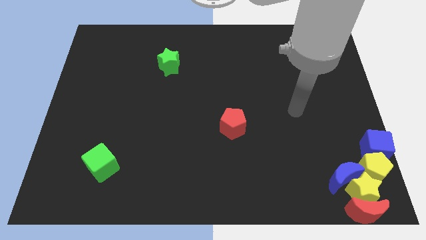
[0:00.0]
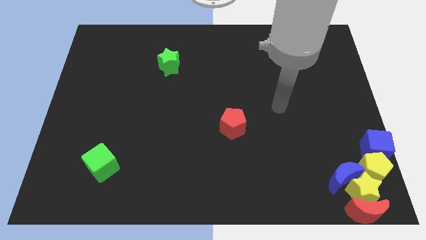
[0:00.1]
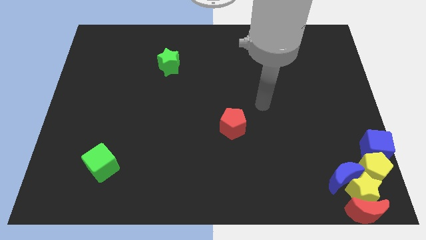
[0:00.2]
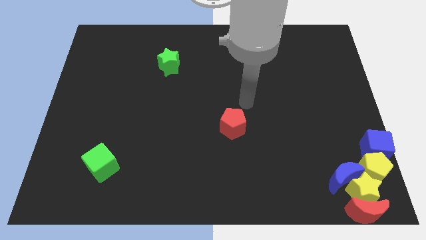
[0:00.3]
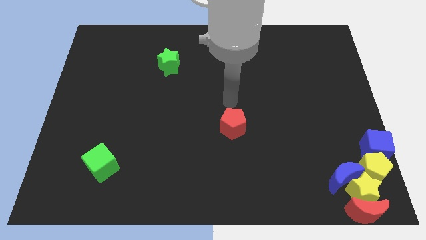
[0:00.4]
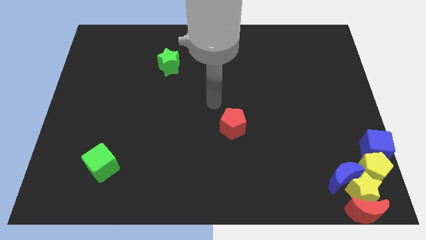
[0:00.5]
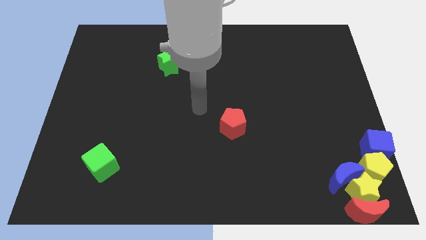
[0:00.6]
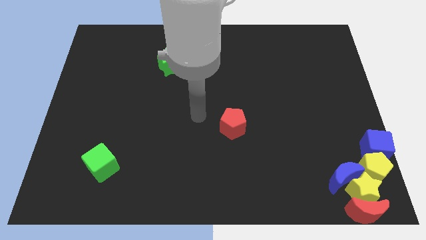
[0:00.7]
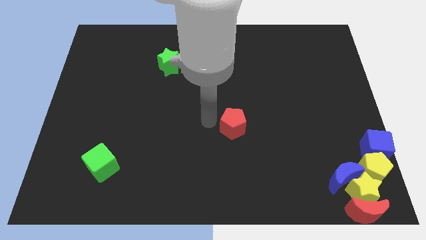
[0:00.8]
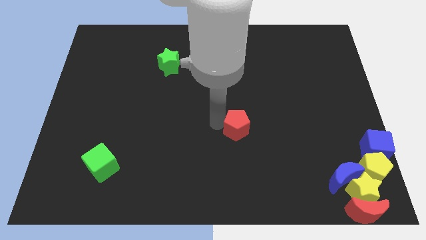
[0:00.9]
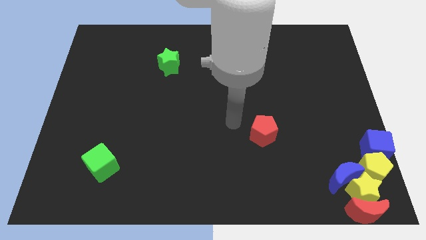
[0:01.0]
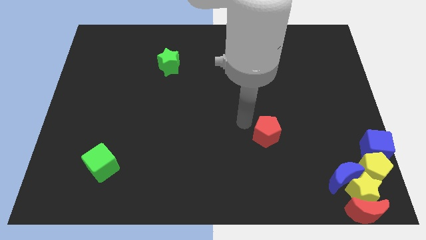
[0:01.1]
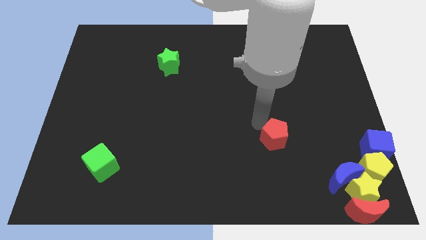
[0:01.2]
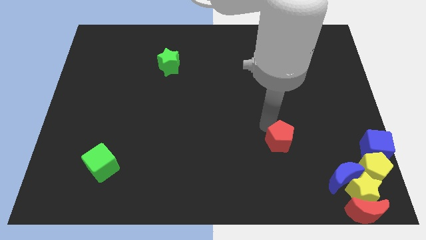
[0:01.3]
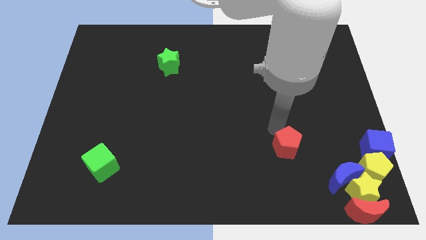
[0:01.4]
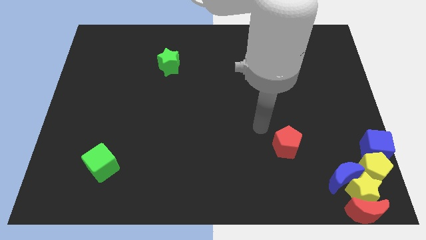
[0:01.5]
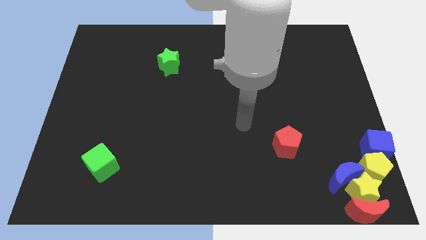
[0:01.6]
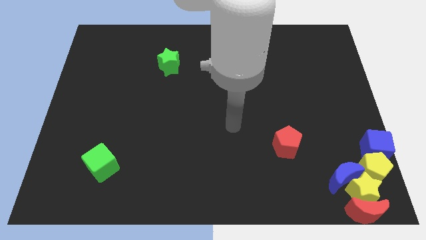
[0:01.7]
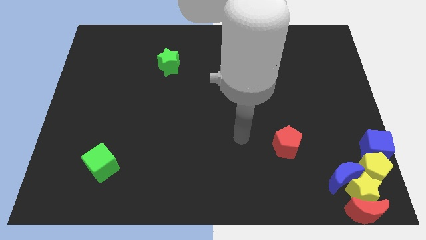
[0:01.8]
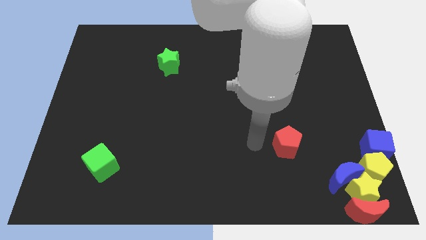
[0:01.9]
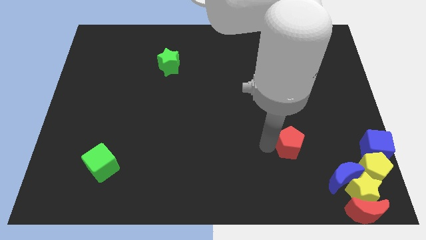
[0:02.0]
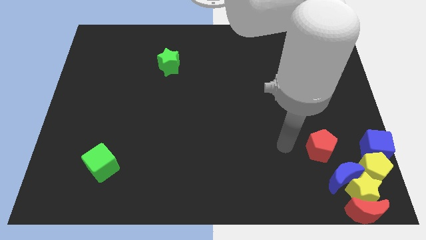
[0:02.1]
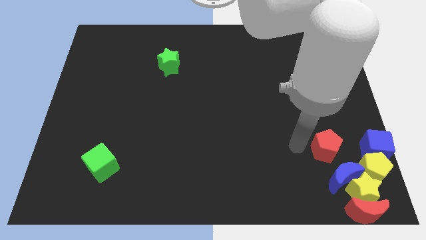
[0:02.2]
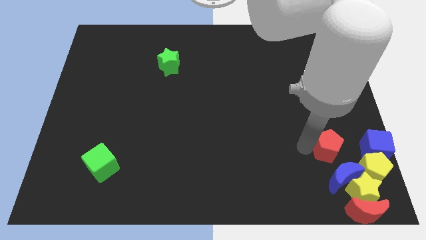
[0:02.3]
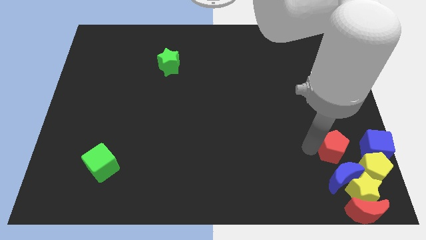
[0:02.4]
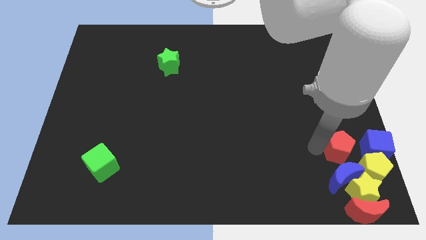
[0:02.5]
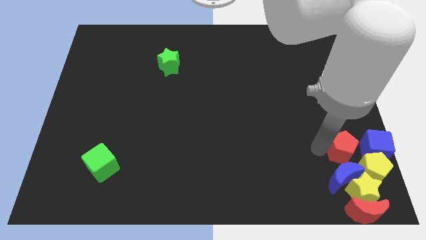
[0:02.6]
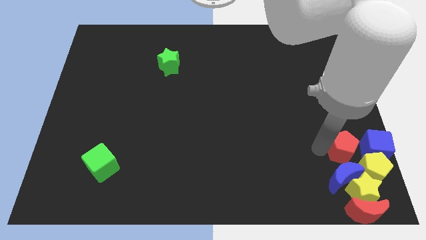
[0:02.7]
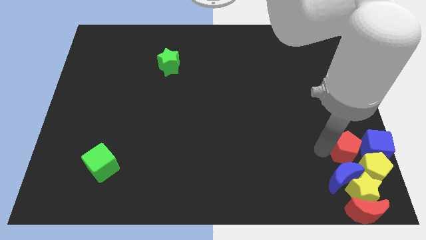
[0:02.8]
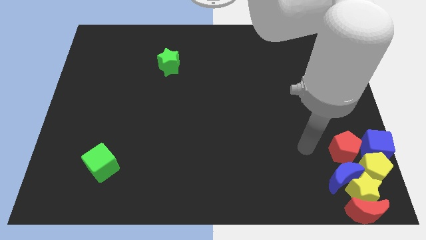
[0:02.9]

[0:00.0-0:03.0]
push the red pentagon towards left of the blue cube

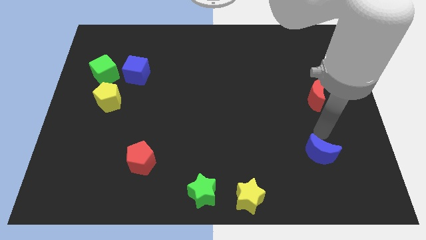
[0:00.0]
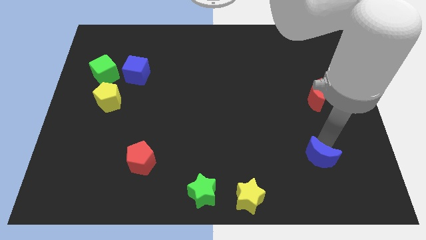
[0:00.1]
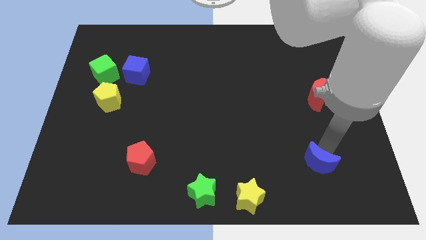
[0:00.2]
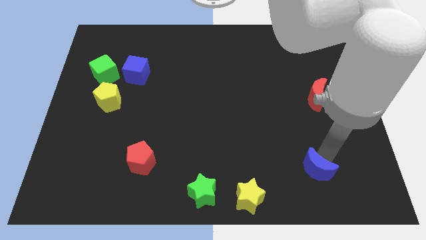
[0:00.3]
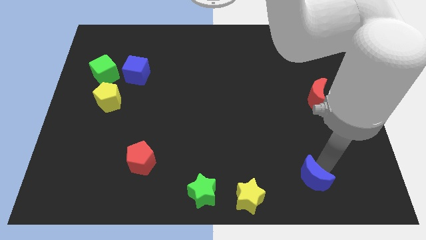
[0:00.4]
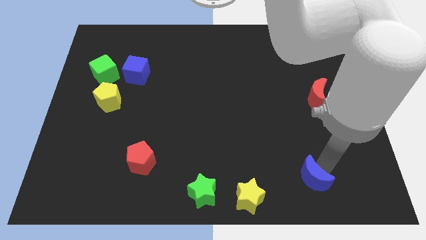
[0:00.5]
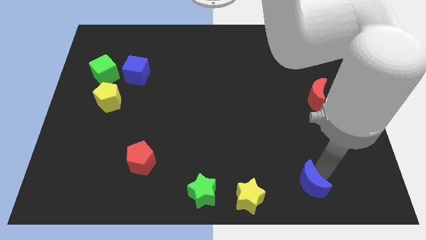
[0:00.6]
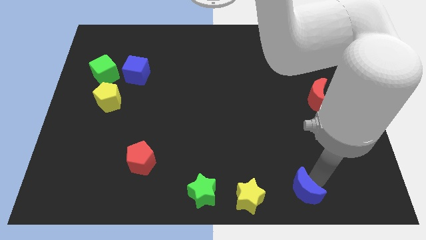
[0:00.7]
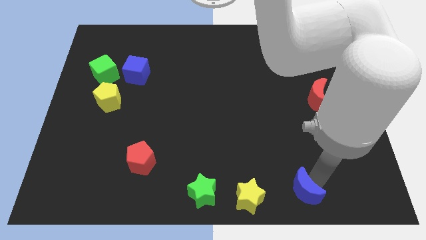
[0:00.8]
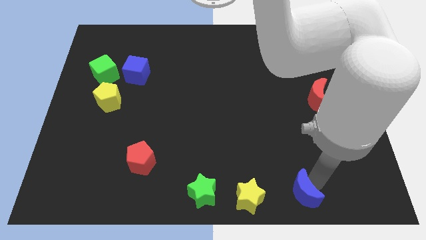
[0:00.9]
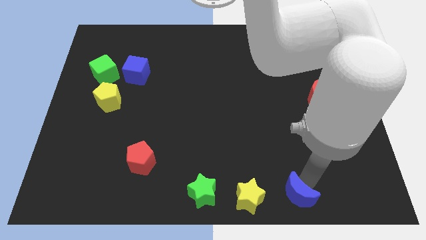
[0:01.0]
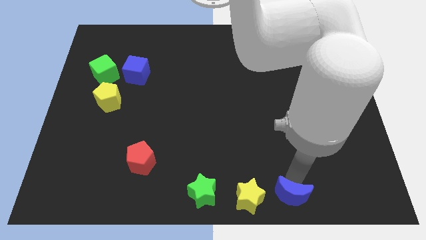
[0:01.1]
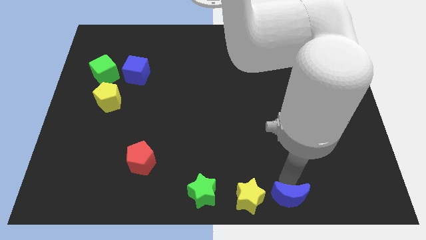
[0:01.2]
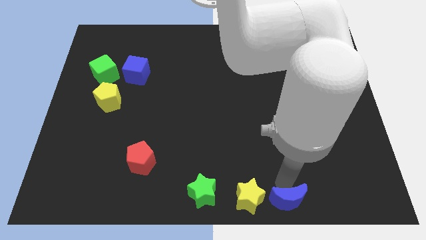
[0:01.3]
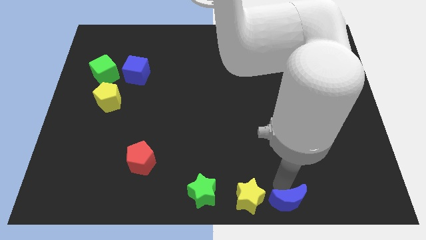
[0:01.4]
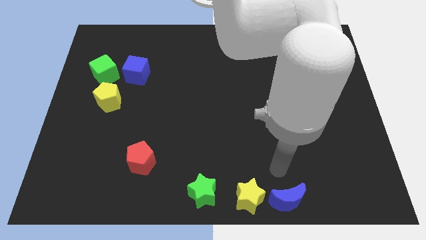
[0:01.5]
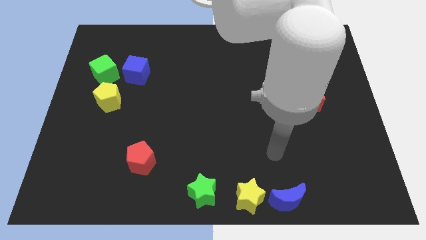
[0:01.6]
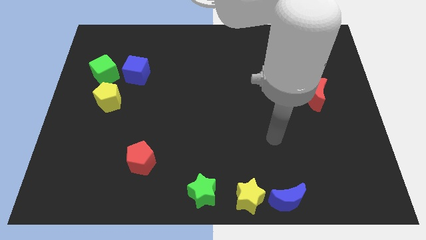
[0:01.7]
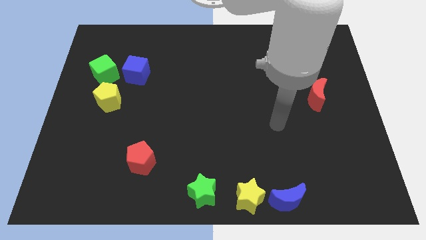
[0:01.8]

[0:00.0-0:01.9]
place the blue crescent to right side of the yellow star

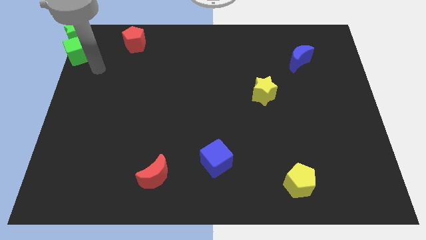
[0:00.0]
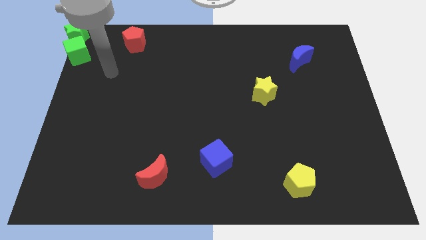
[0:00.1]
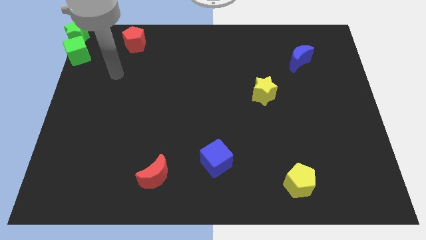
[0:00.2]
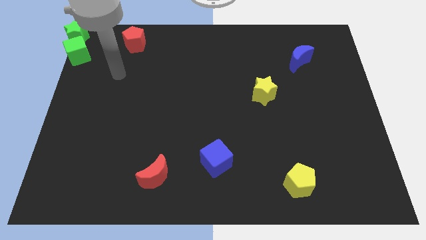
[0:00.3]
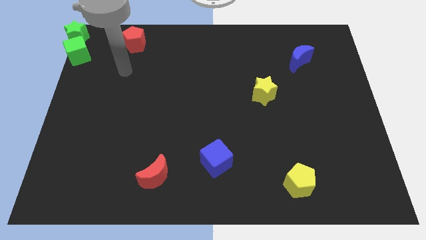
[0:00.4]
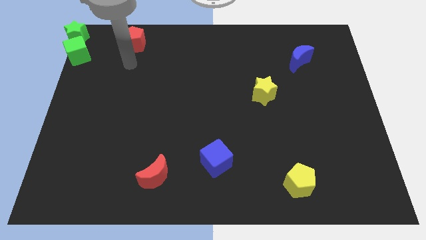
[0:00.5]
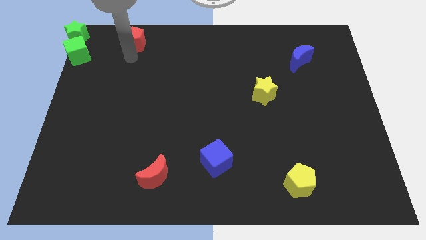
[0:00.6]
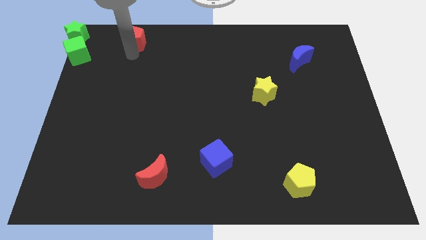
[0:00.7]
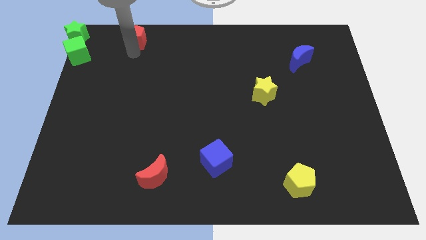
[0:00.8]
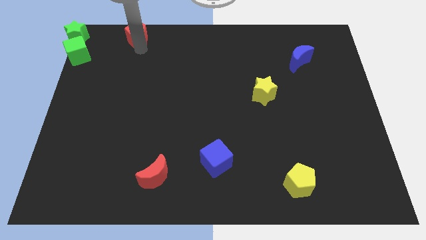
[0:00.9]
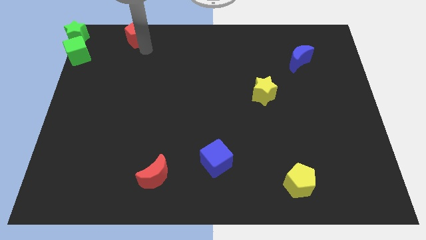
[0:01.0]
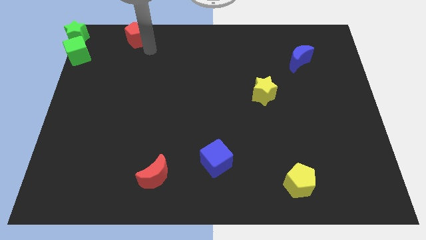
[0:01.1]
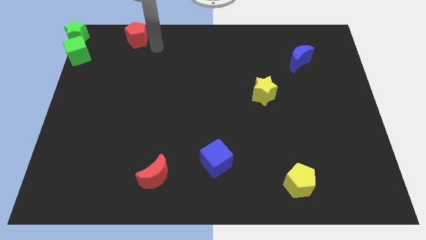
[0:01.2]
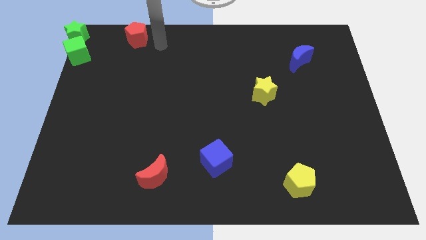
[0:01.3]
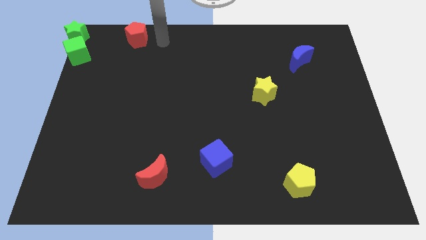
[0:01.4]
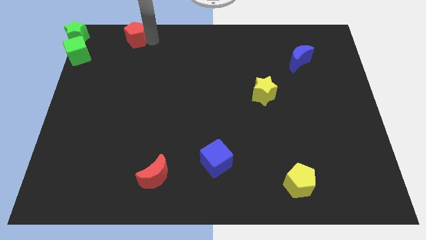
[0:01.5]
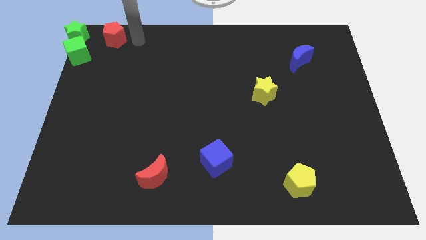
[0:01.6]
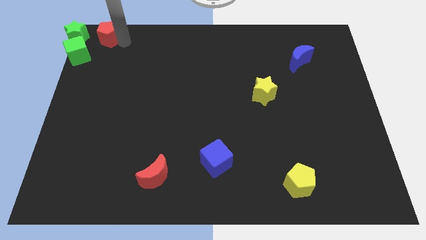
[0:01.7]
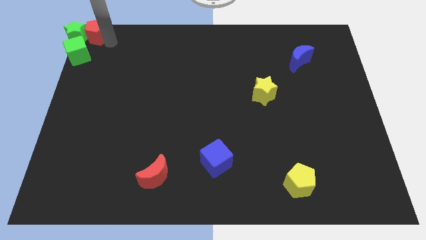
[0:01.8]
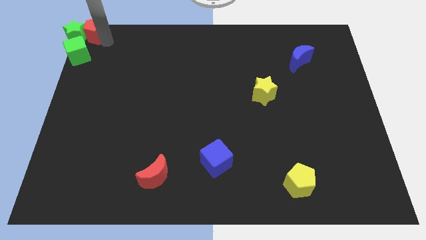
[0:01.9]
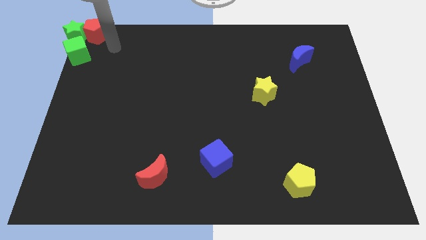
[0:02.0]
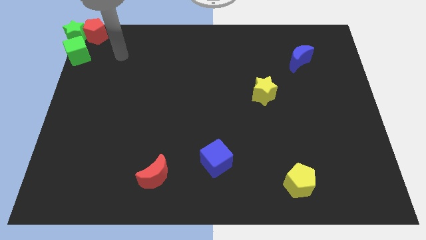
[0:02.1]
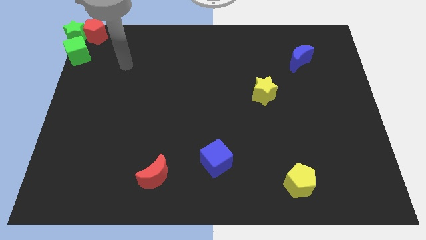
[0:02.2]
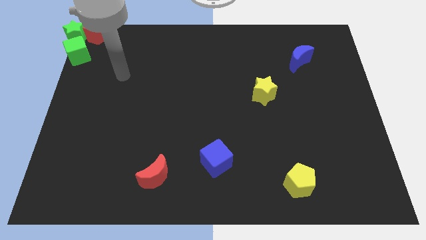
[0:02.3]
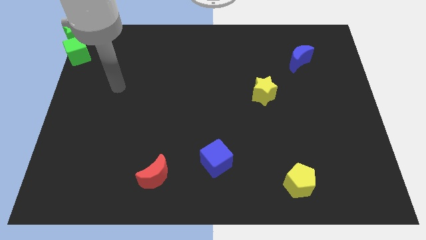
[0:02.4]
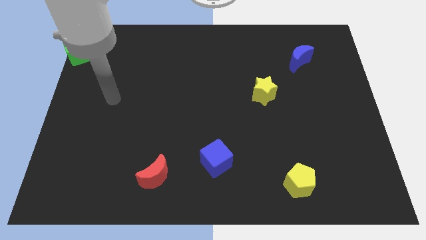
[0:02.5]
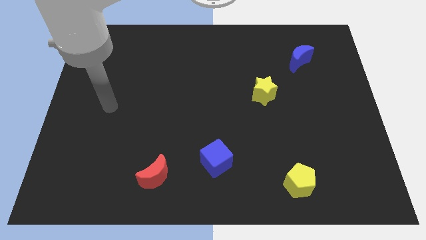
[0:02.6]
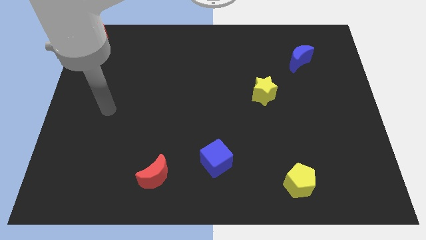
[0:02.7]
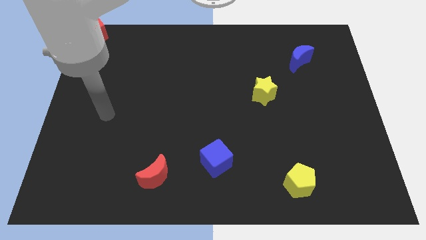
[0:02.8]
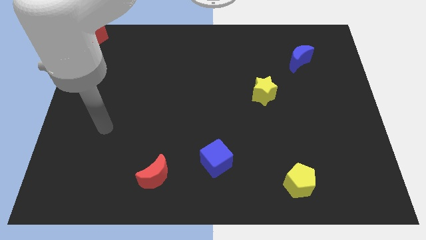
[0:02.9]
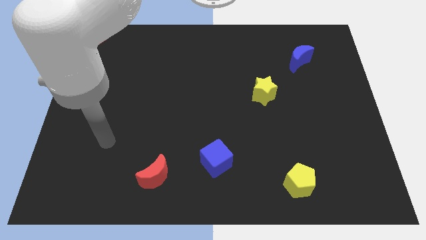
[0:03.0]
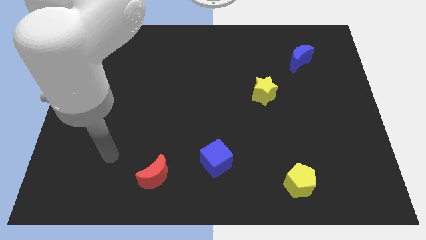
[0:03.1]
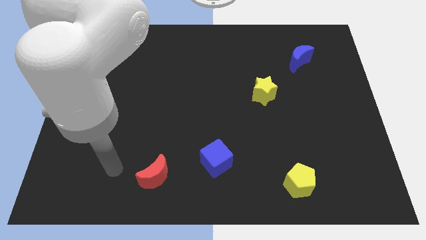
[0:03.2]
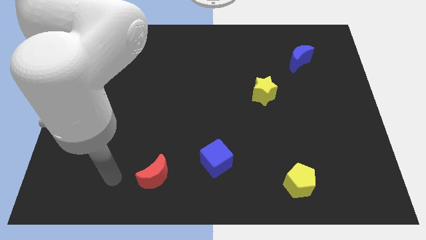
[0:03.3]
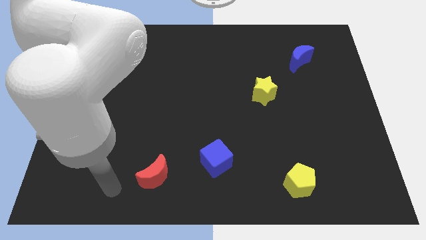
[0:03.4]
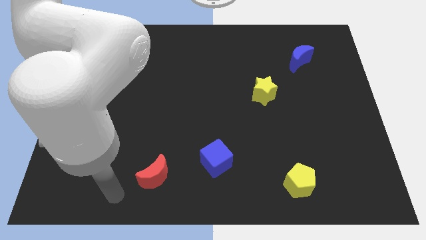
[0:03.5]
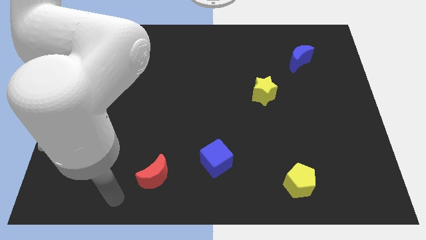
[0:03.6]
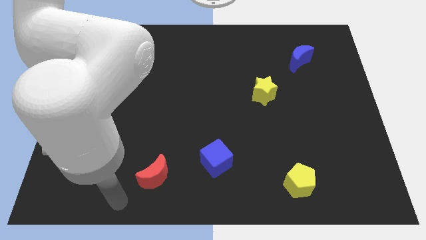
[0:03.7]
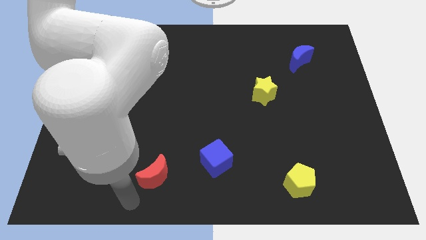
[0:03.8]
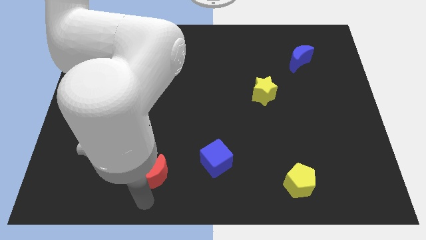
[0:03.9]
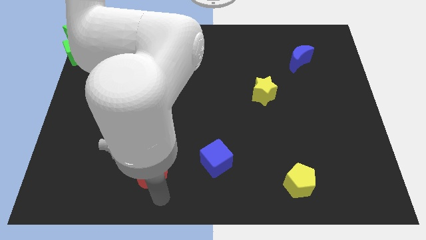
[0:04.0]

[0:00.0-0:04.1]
push the red pentagon into the green star

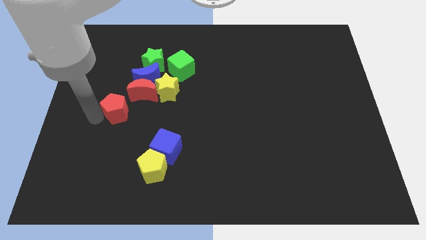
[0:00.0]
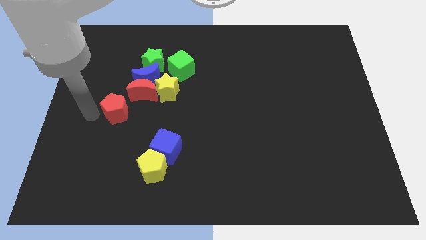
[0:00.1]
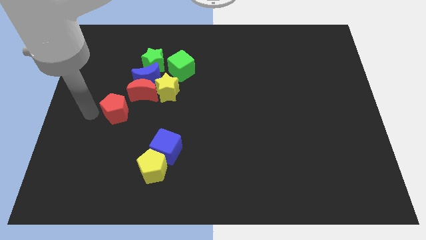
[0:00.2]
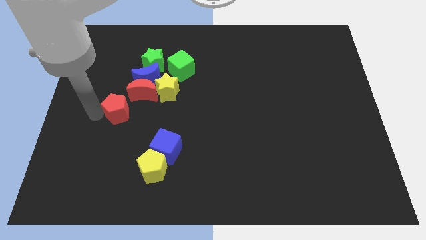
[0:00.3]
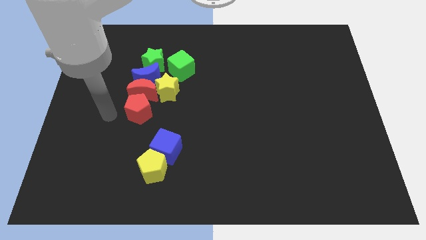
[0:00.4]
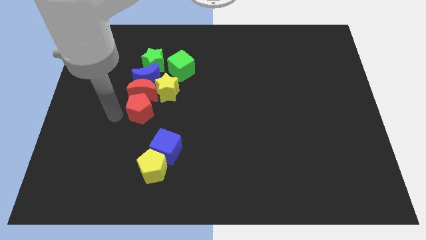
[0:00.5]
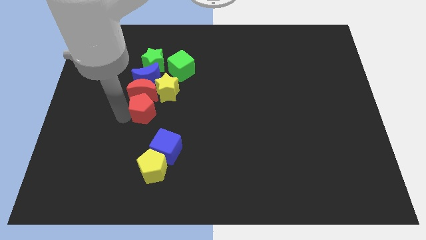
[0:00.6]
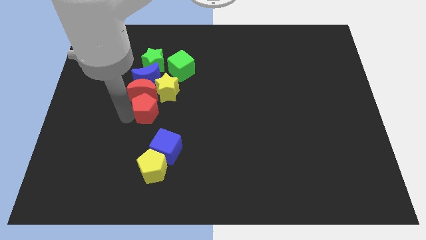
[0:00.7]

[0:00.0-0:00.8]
place the red pentagon below the red moon
